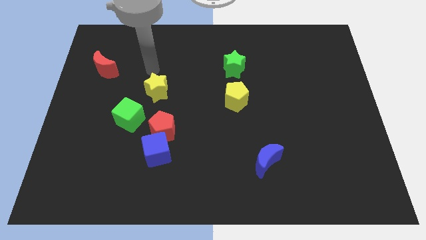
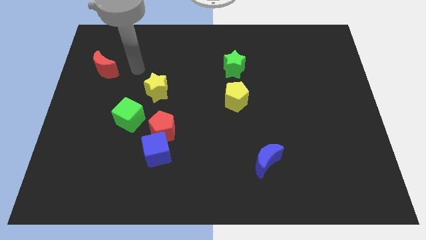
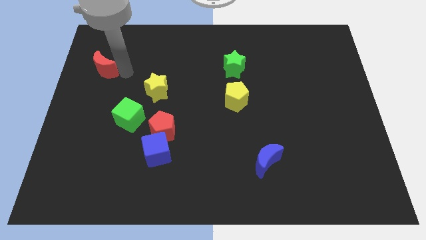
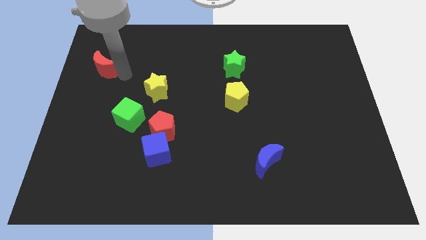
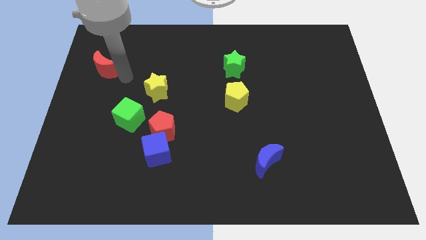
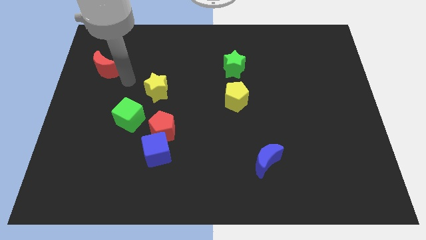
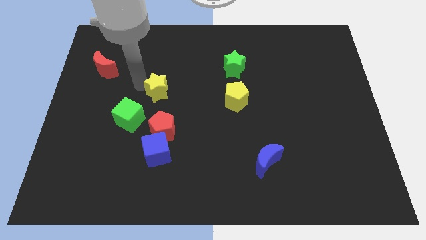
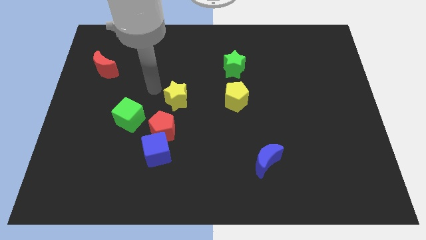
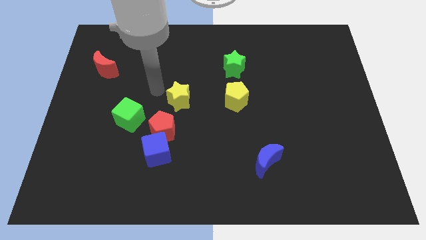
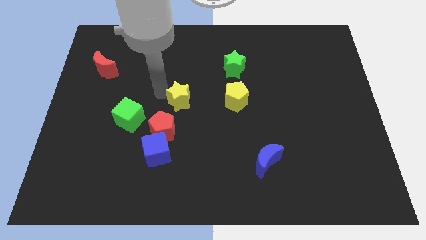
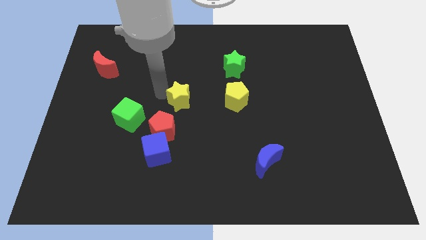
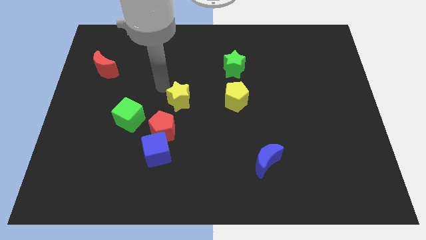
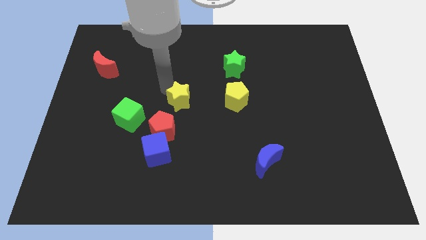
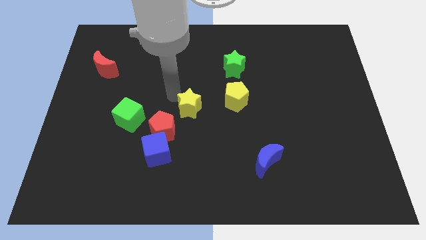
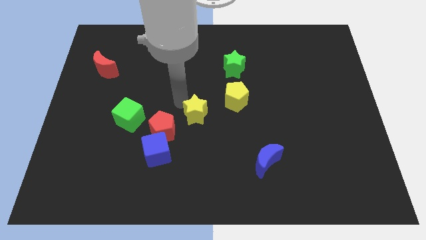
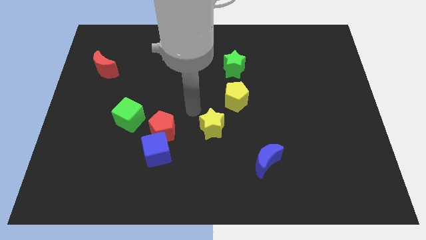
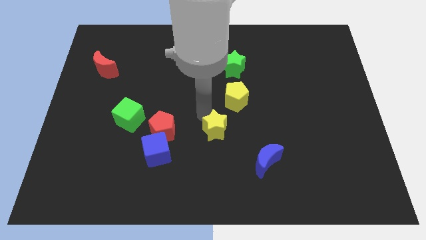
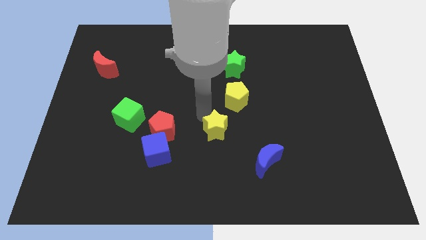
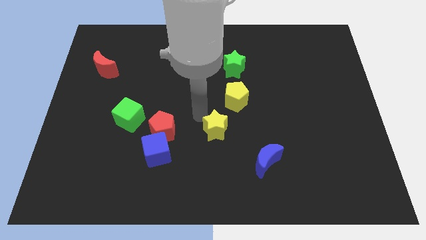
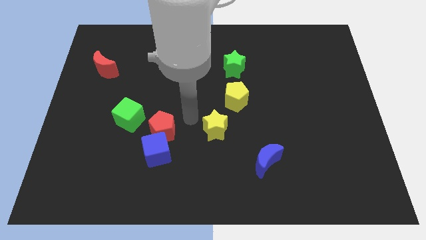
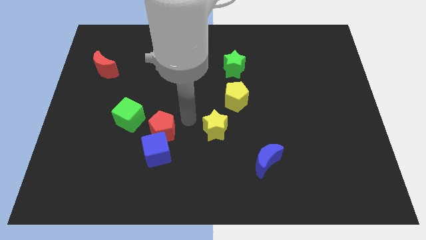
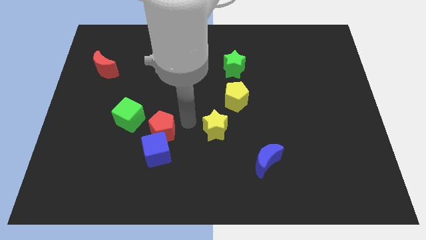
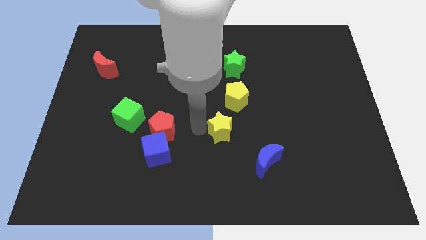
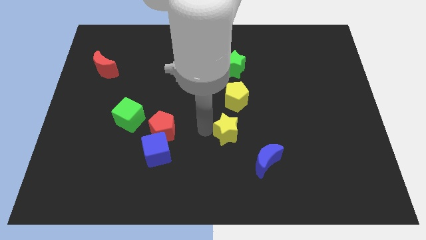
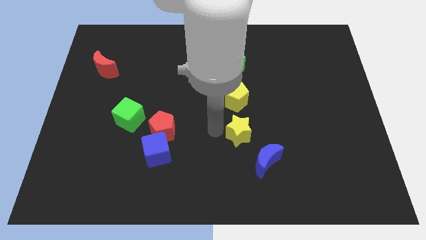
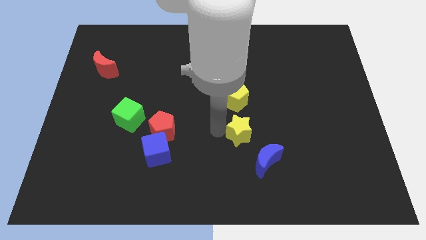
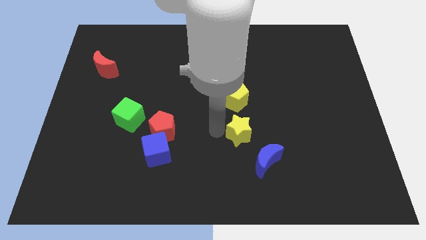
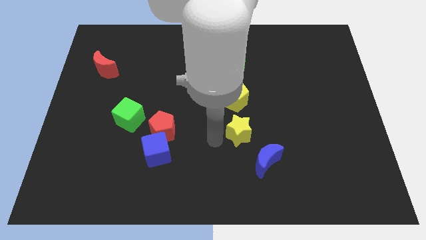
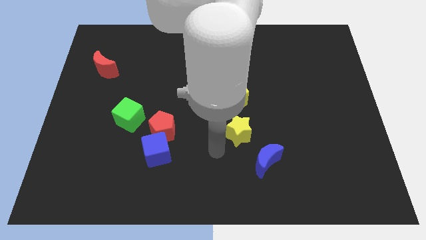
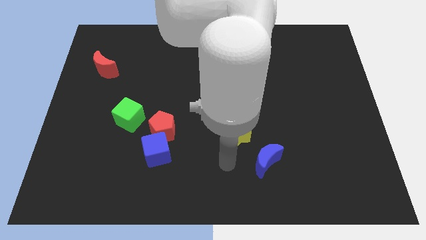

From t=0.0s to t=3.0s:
push the yellow star to the bottom of the yellow pentagon

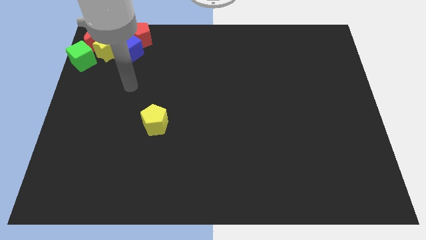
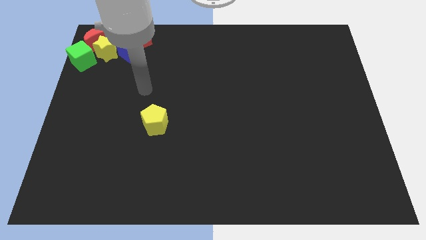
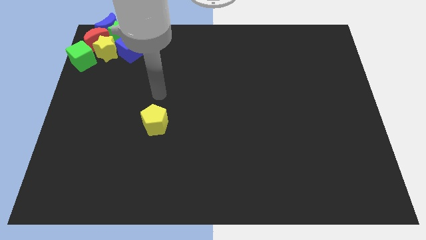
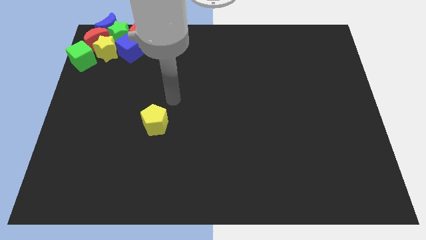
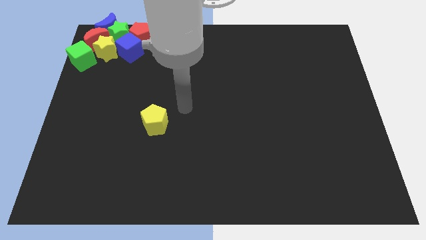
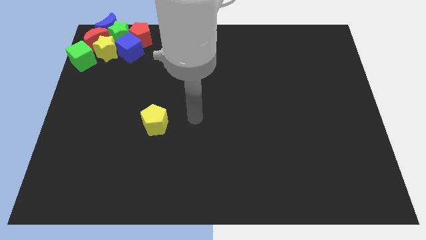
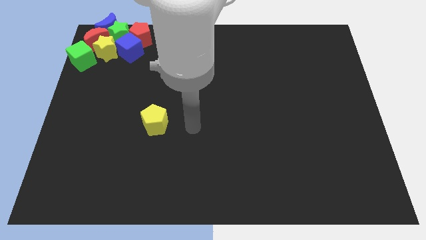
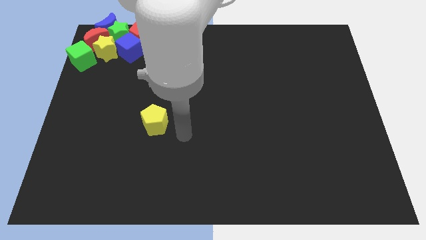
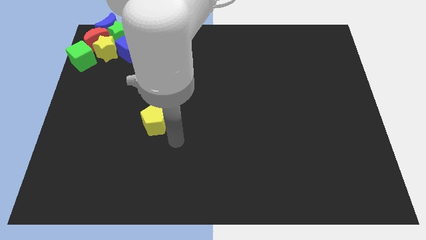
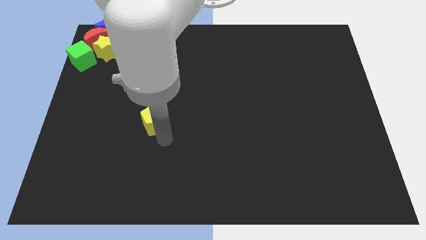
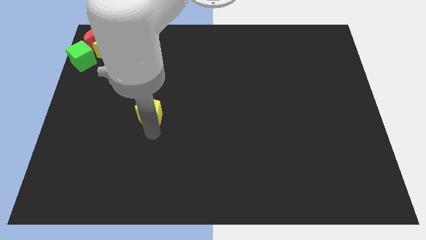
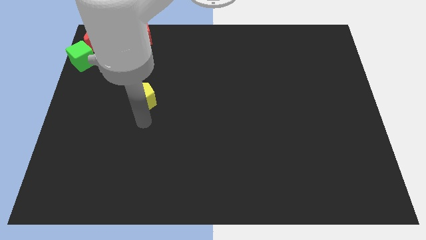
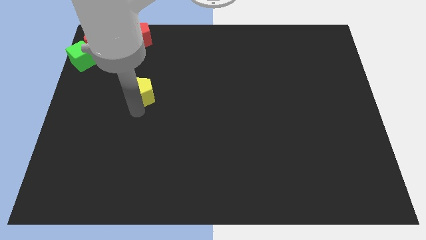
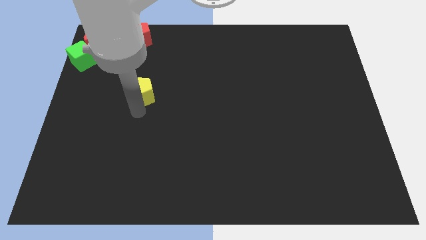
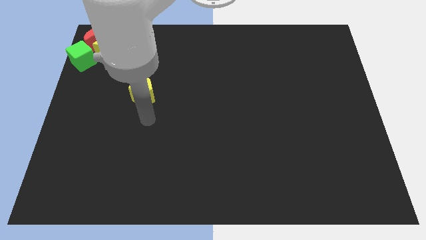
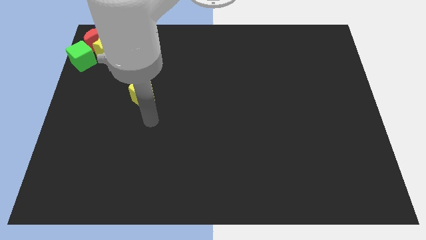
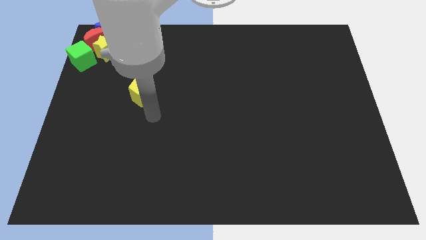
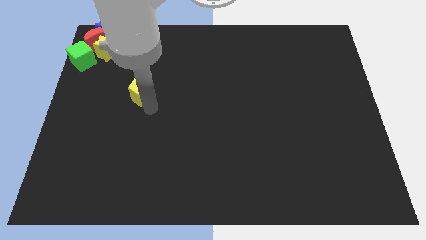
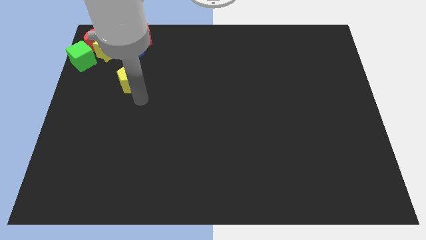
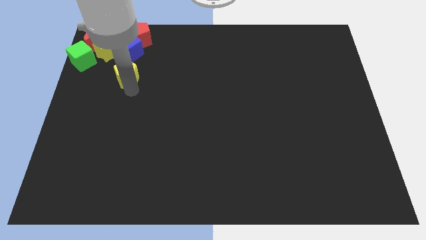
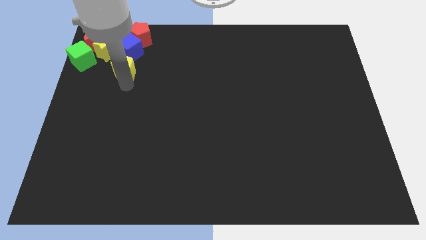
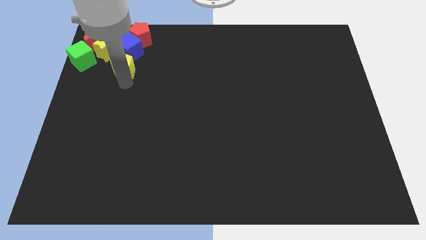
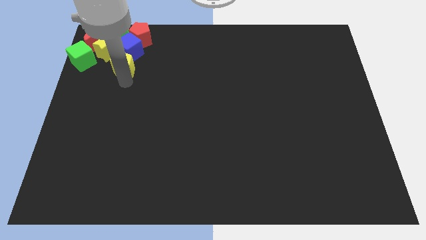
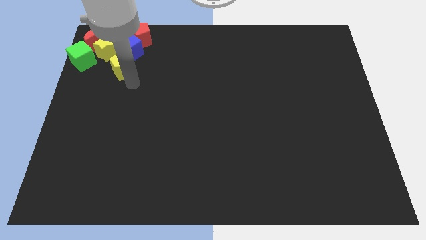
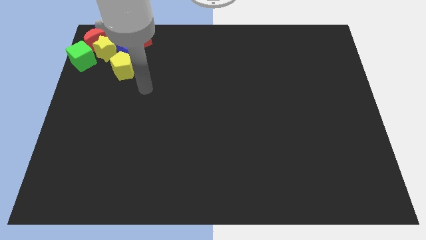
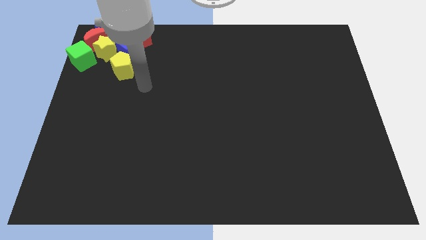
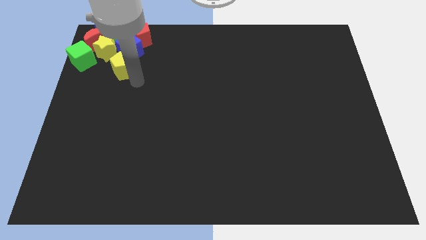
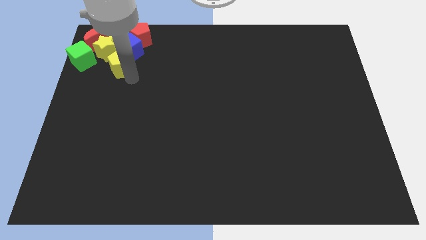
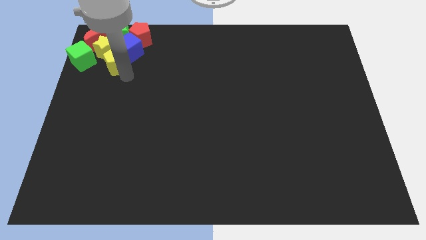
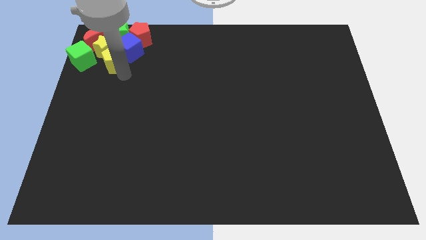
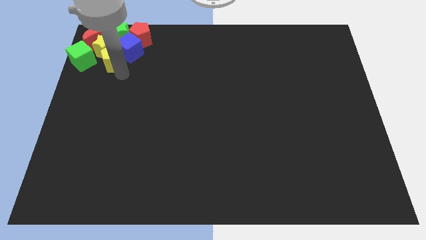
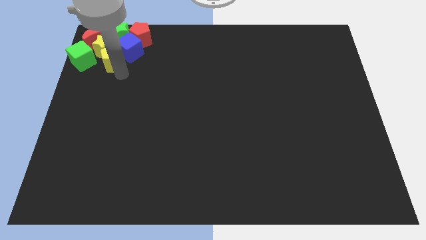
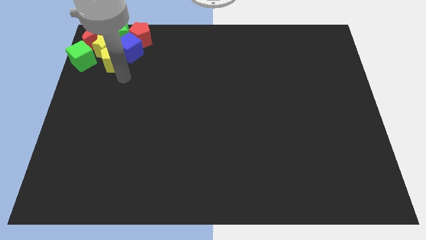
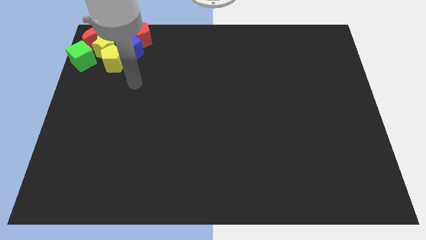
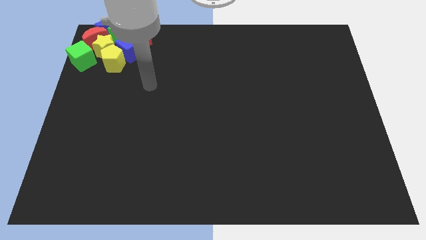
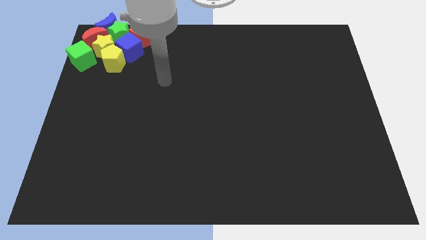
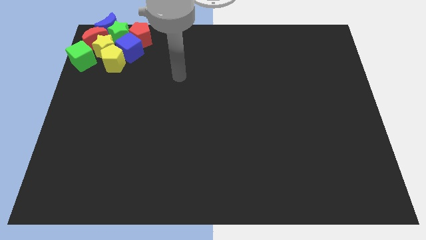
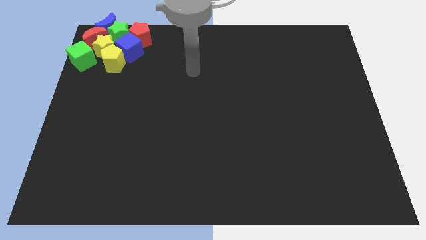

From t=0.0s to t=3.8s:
slide the yellow pentagon into the yellow star

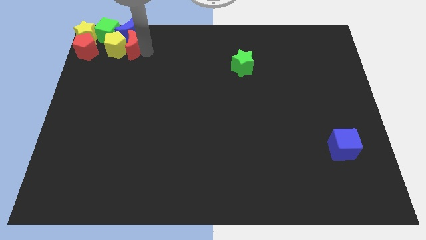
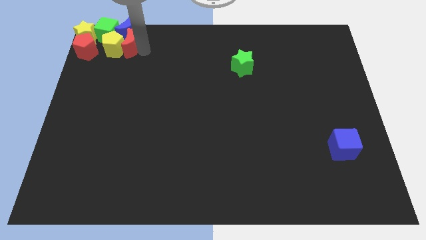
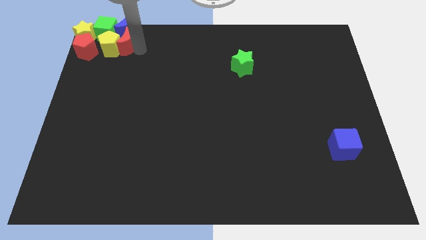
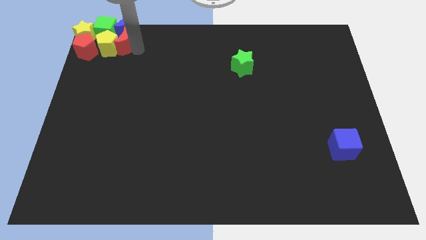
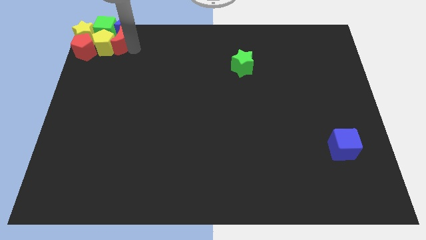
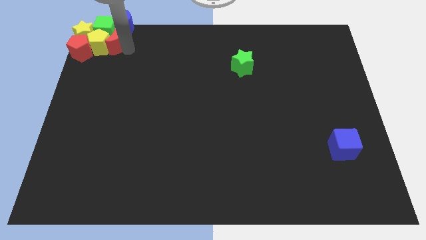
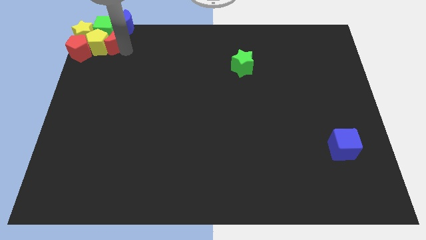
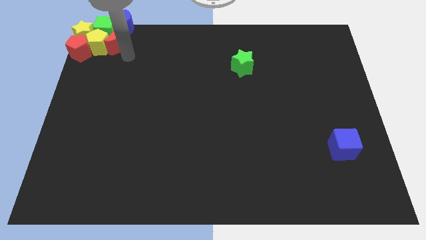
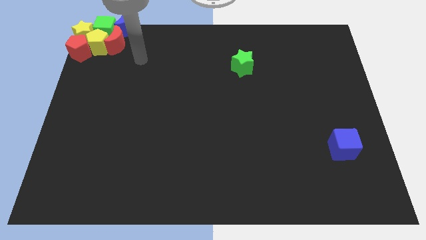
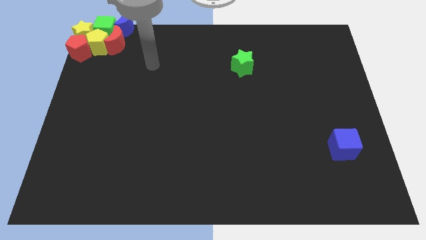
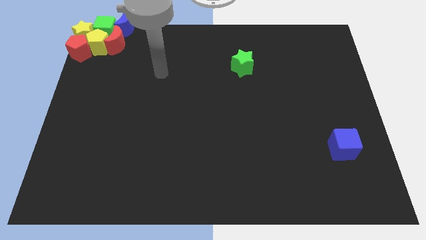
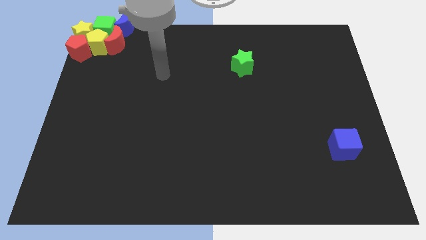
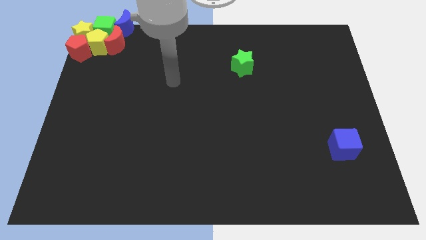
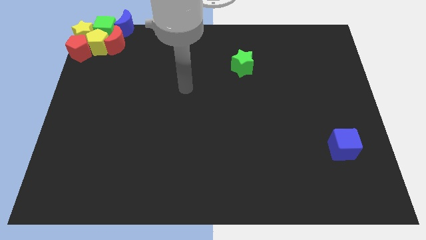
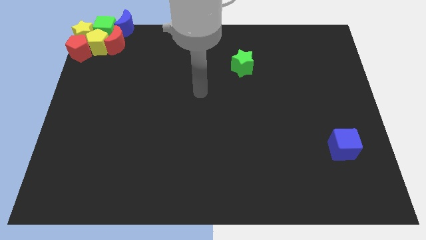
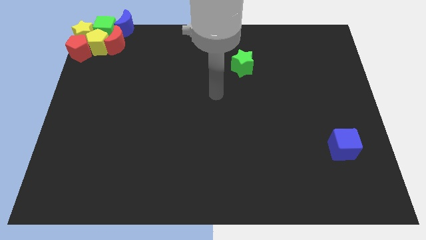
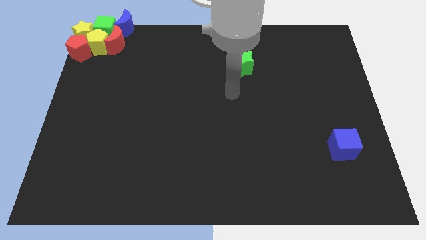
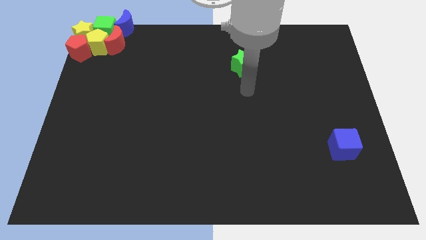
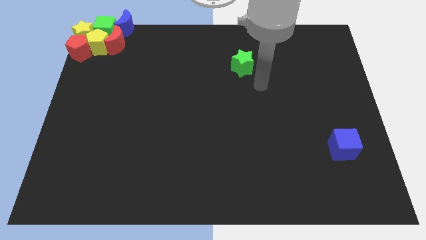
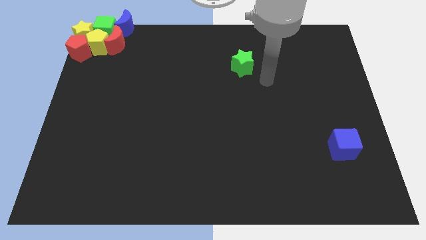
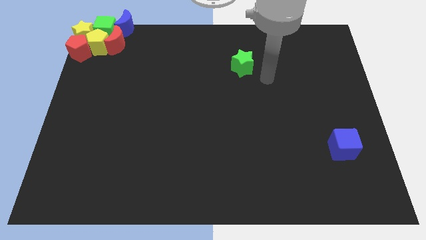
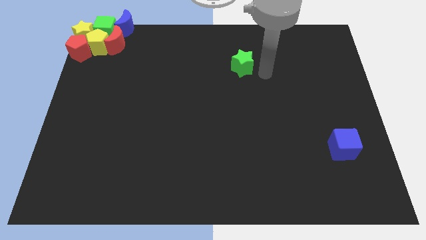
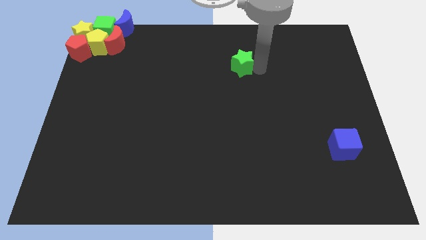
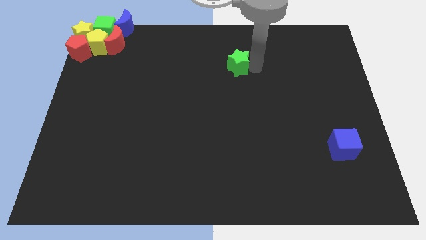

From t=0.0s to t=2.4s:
move the arm right to the green star
